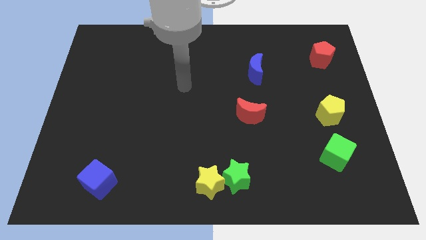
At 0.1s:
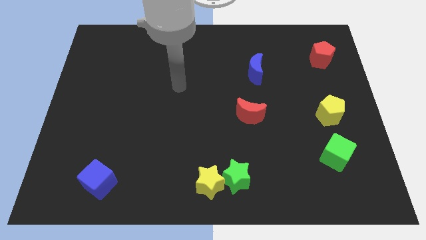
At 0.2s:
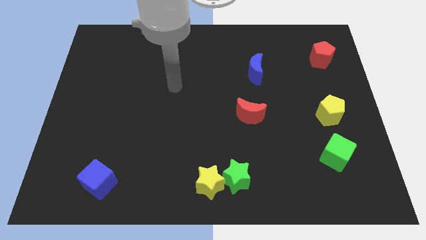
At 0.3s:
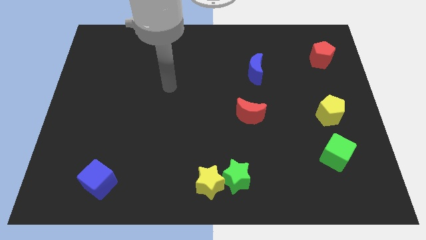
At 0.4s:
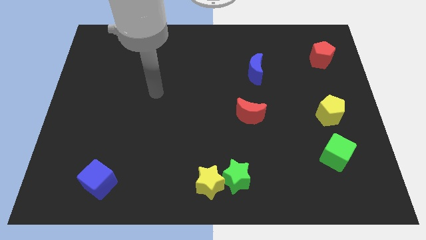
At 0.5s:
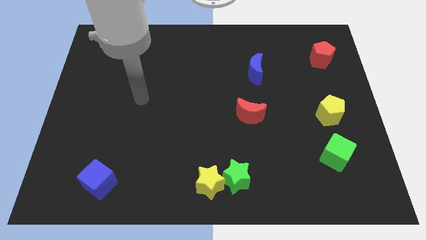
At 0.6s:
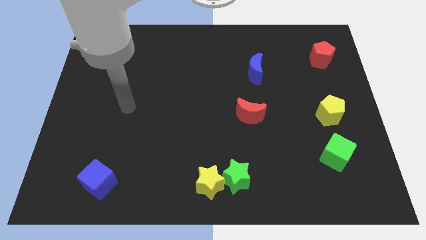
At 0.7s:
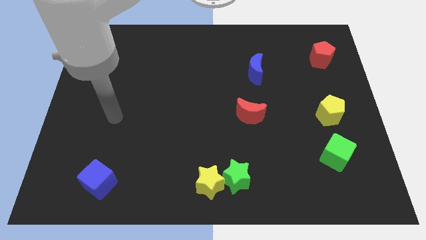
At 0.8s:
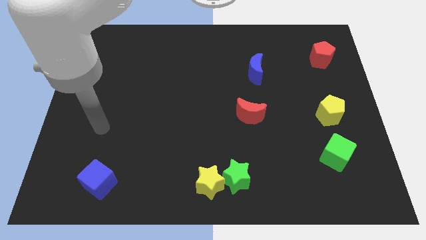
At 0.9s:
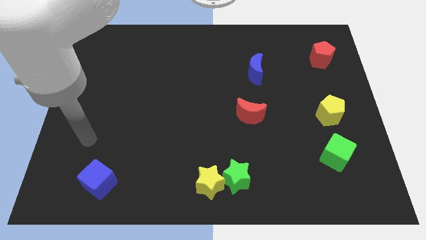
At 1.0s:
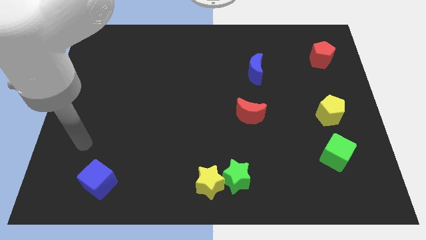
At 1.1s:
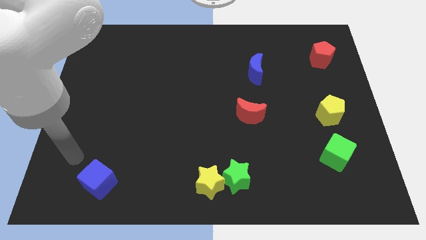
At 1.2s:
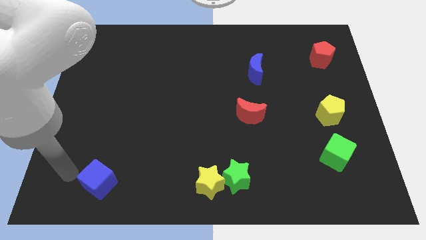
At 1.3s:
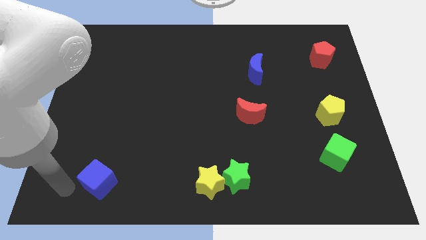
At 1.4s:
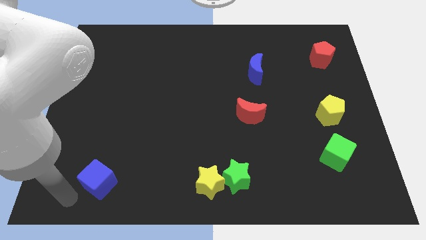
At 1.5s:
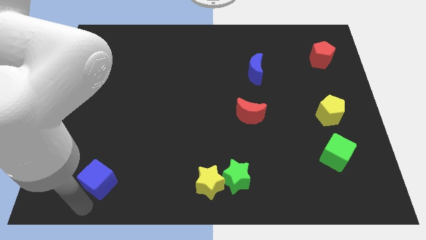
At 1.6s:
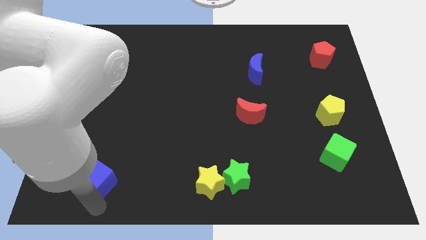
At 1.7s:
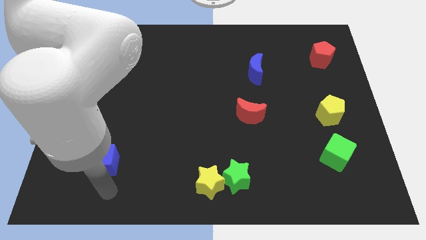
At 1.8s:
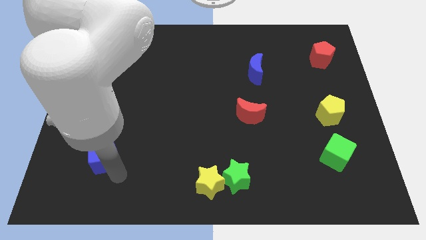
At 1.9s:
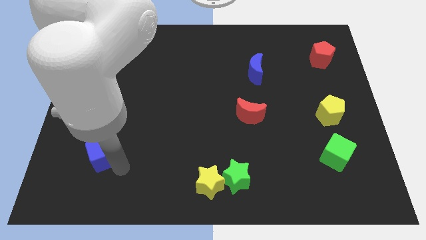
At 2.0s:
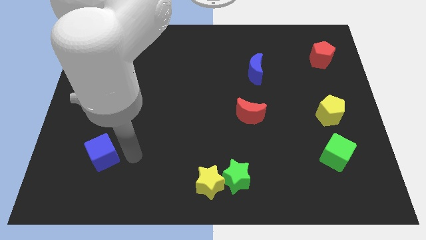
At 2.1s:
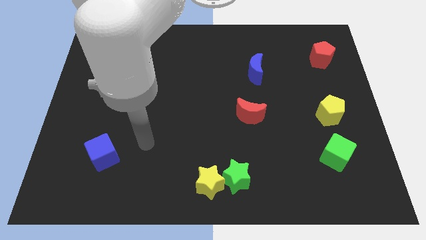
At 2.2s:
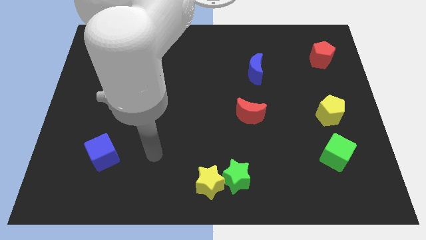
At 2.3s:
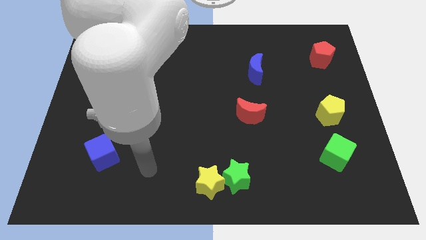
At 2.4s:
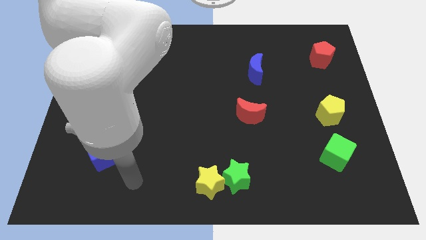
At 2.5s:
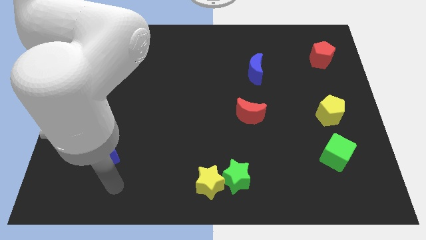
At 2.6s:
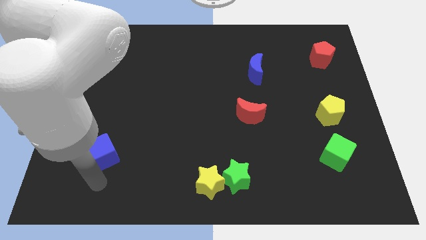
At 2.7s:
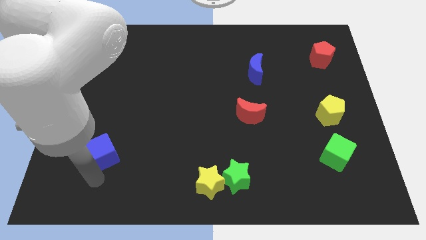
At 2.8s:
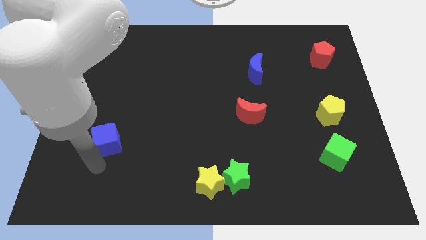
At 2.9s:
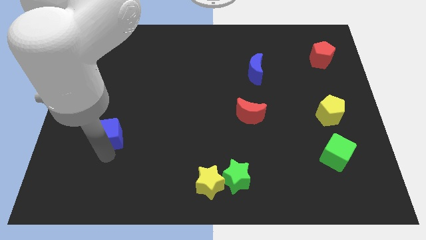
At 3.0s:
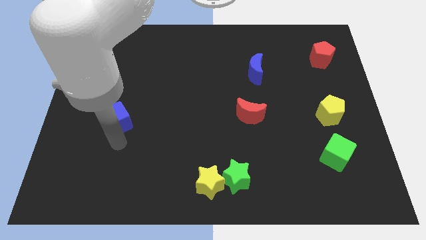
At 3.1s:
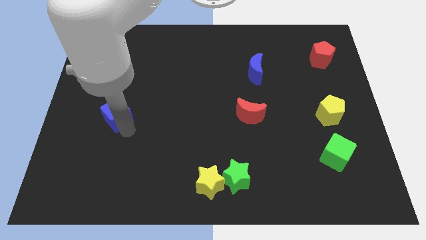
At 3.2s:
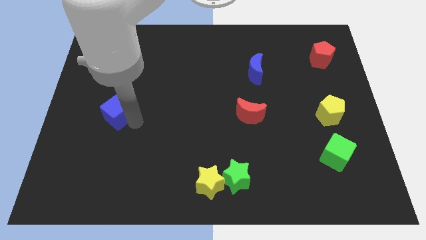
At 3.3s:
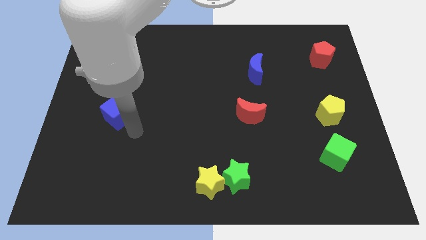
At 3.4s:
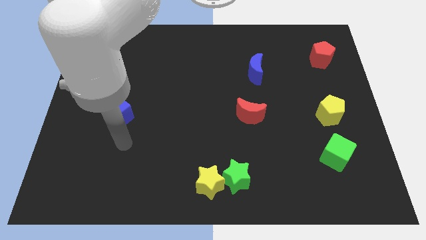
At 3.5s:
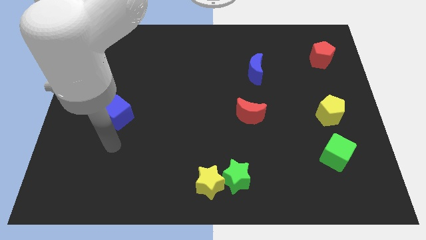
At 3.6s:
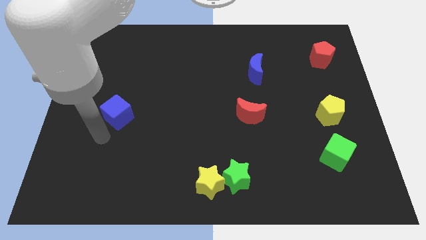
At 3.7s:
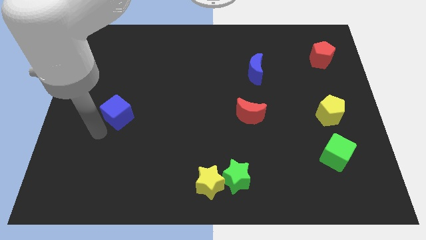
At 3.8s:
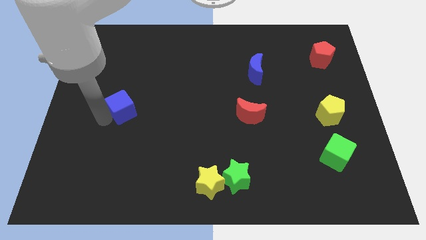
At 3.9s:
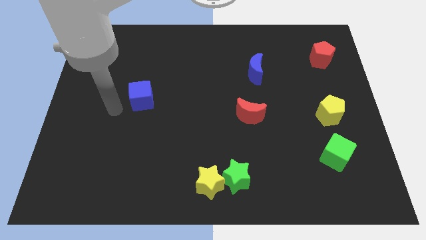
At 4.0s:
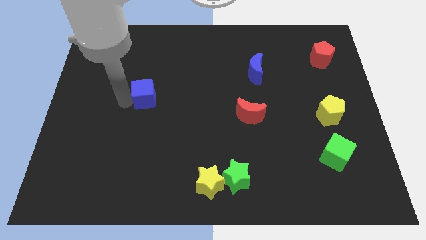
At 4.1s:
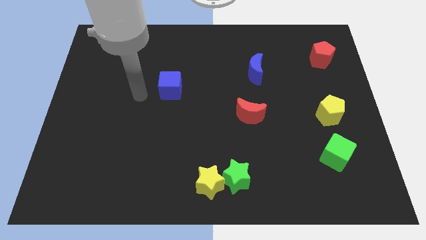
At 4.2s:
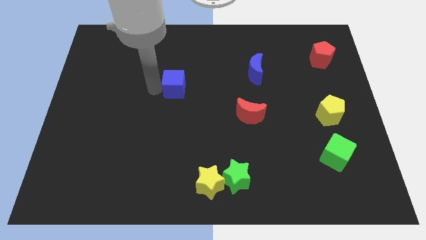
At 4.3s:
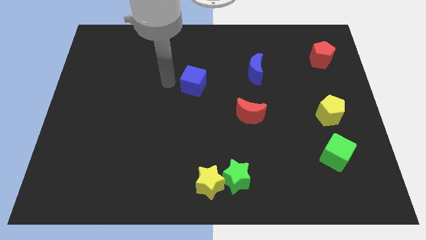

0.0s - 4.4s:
move blue cube towards the blue crescent

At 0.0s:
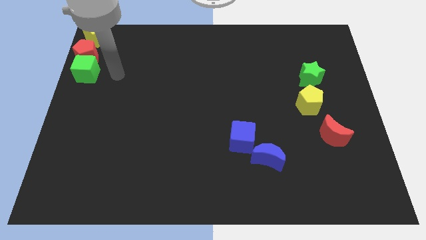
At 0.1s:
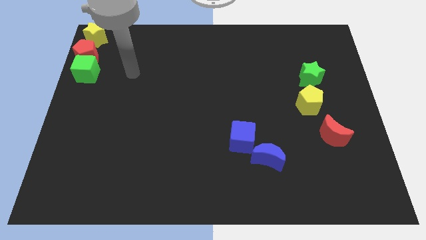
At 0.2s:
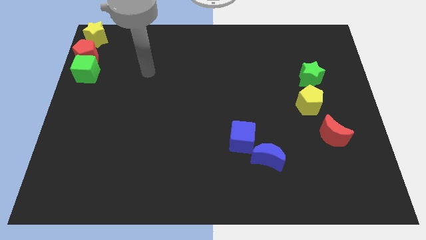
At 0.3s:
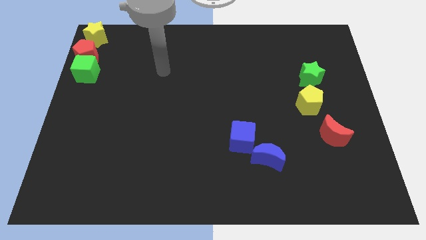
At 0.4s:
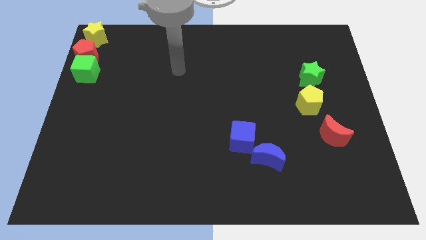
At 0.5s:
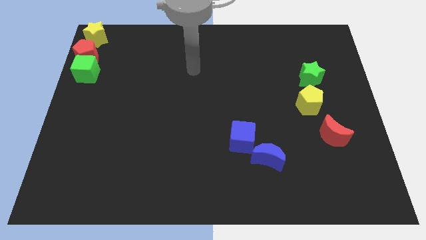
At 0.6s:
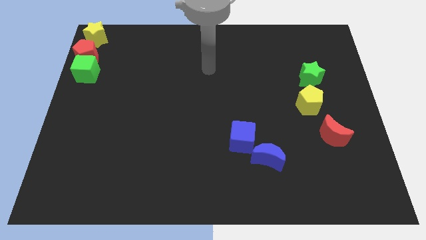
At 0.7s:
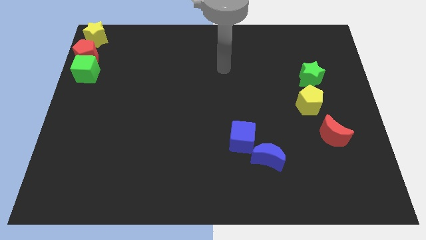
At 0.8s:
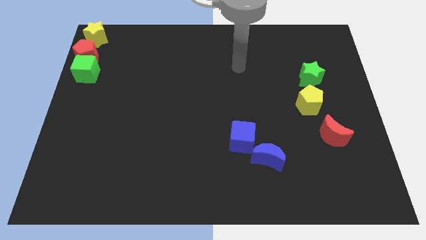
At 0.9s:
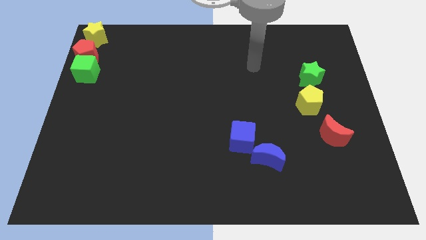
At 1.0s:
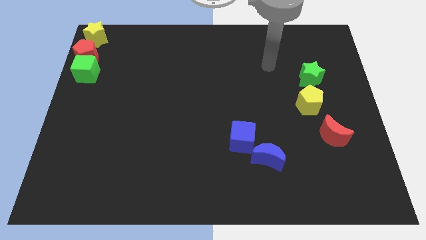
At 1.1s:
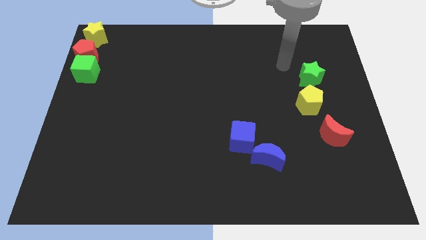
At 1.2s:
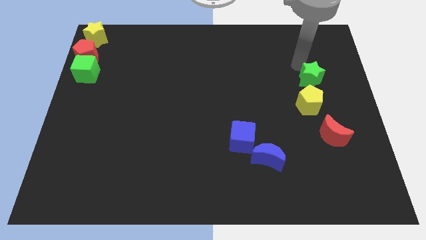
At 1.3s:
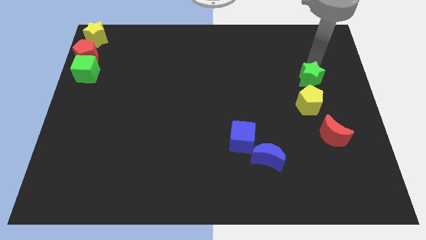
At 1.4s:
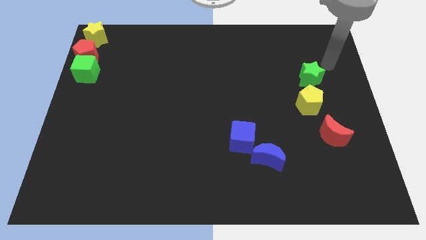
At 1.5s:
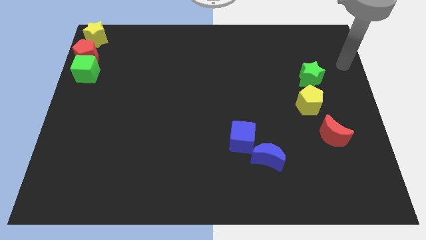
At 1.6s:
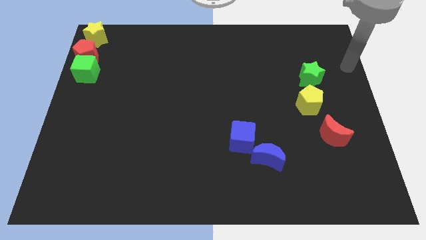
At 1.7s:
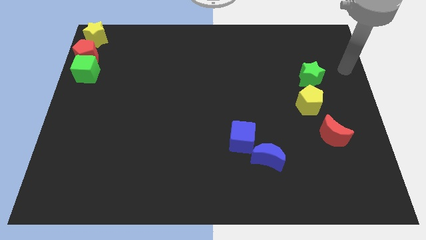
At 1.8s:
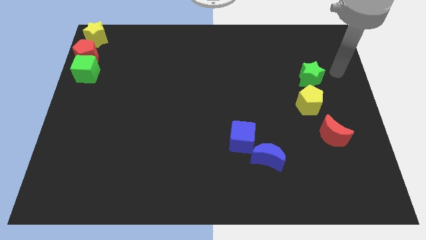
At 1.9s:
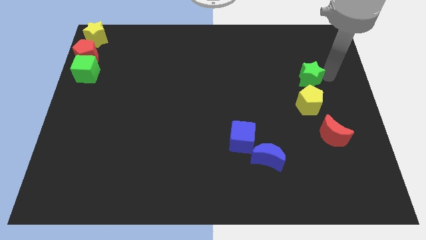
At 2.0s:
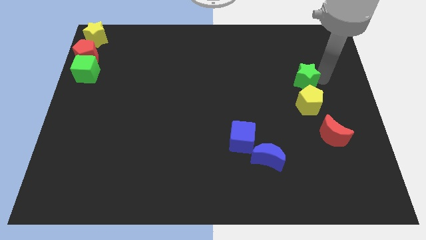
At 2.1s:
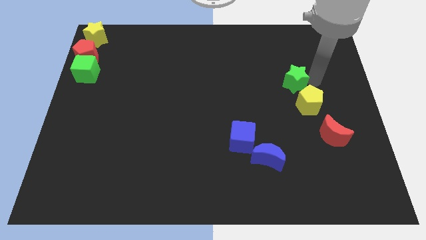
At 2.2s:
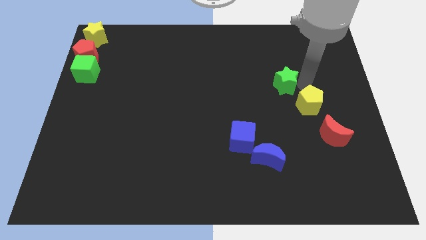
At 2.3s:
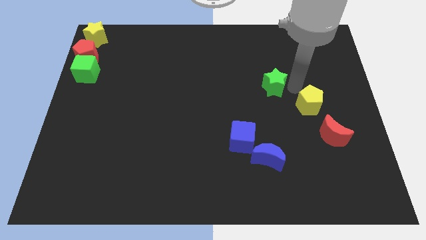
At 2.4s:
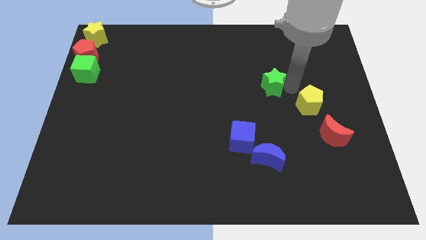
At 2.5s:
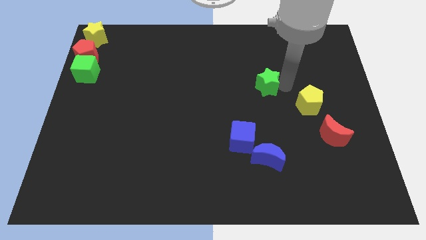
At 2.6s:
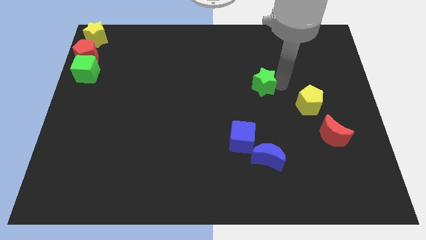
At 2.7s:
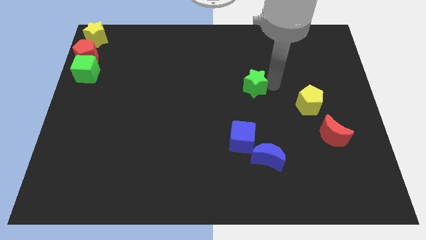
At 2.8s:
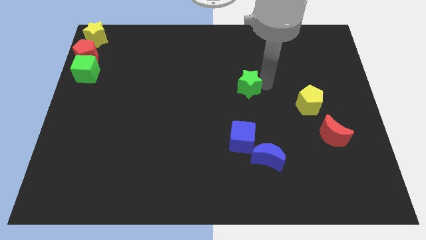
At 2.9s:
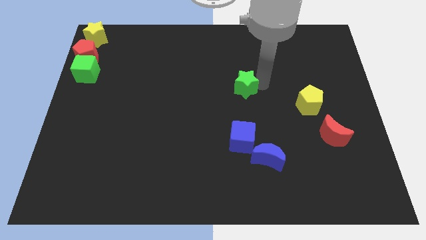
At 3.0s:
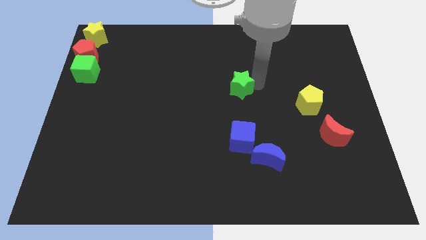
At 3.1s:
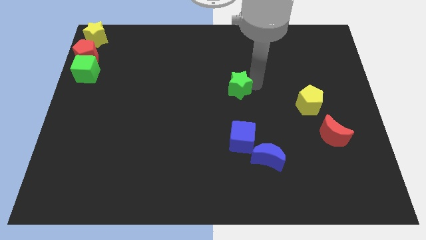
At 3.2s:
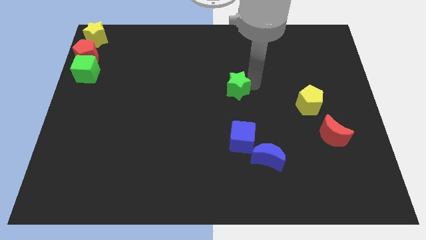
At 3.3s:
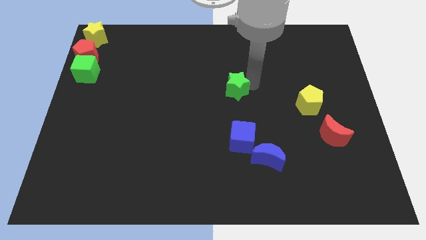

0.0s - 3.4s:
place the green star towards the left side of the board

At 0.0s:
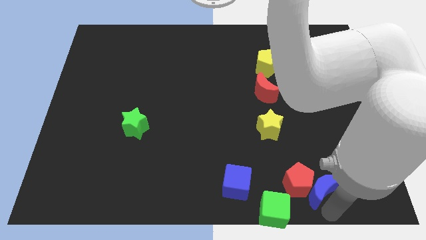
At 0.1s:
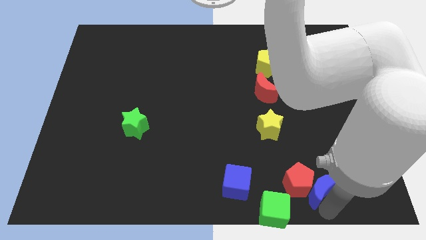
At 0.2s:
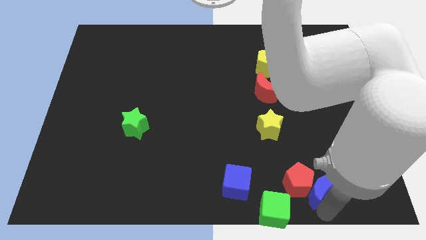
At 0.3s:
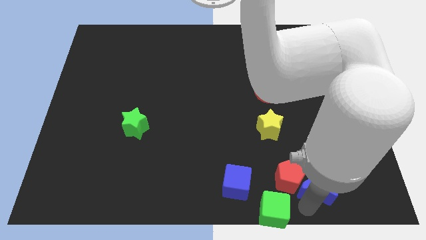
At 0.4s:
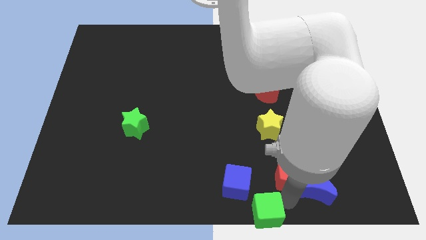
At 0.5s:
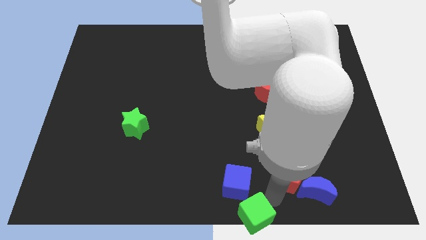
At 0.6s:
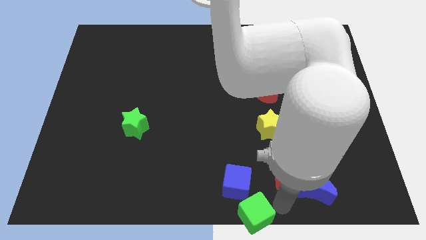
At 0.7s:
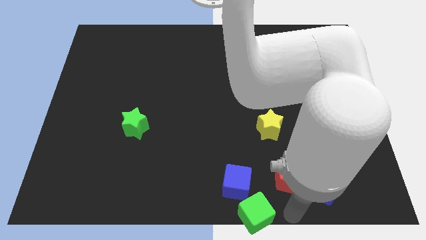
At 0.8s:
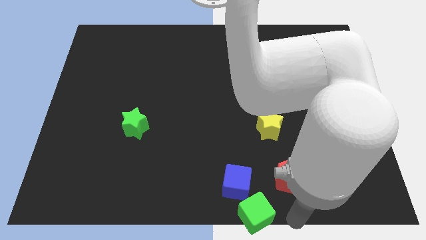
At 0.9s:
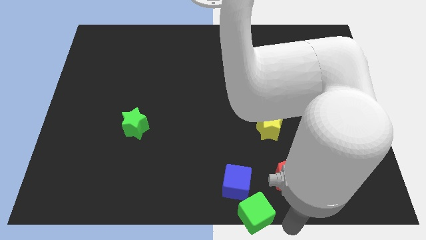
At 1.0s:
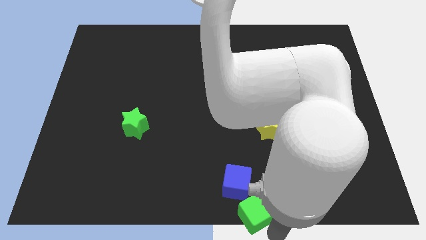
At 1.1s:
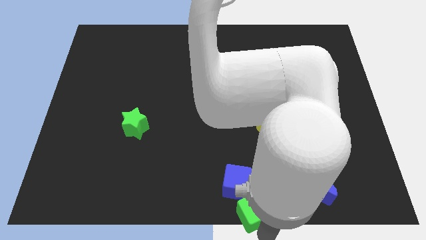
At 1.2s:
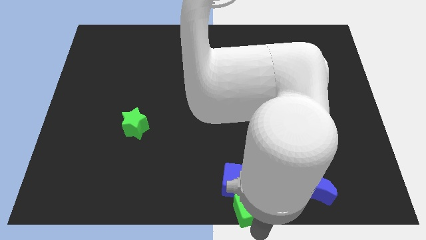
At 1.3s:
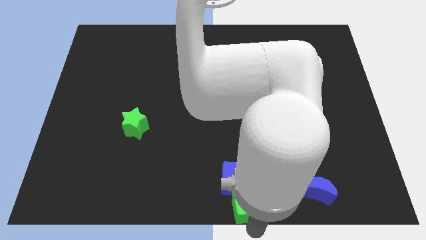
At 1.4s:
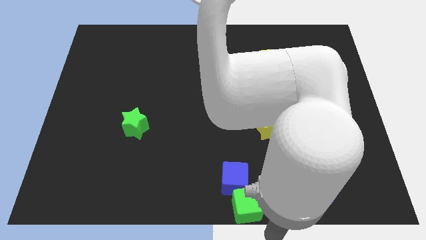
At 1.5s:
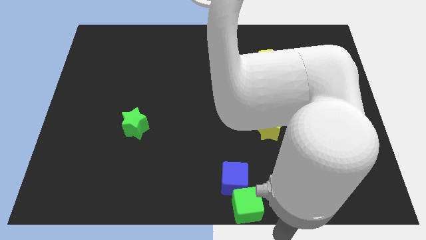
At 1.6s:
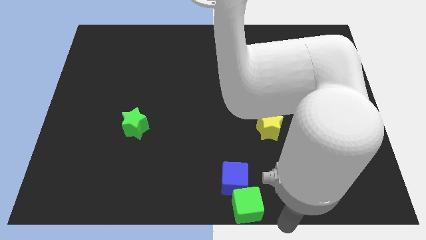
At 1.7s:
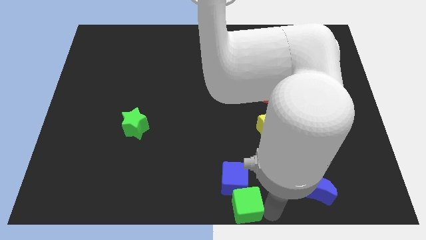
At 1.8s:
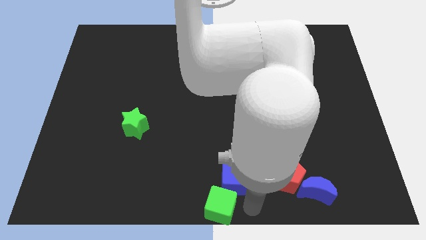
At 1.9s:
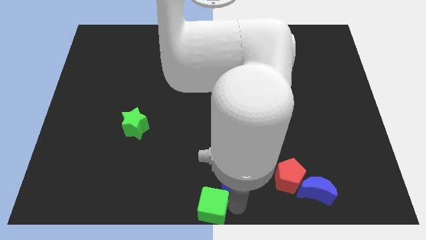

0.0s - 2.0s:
push green block to the left bottom of the board
